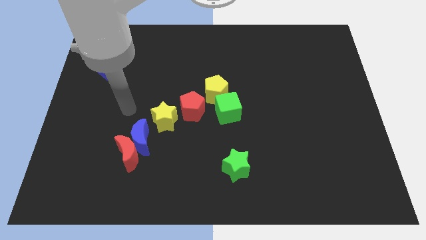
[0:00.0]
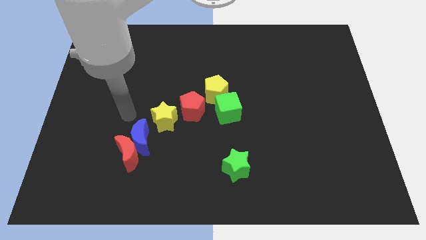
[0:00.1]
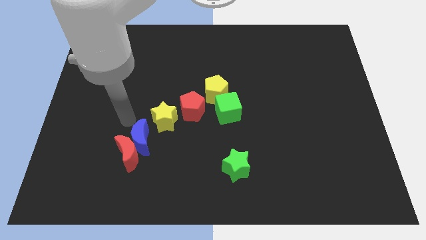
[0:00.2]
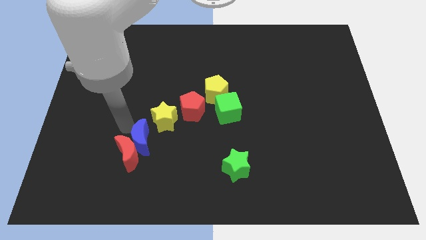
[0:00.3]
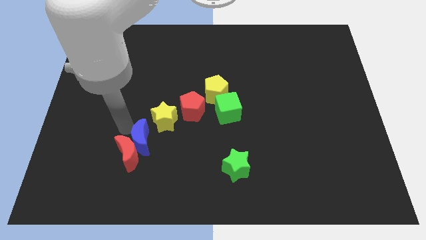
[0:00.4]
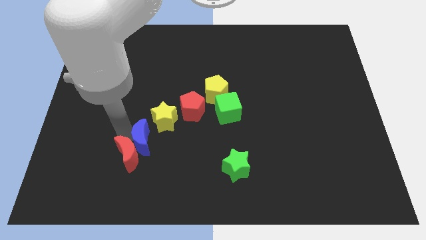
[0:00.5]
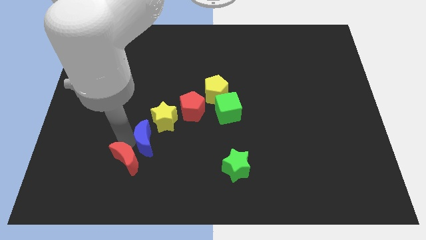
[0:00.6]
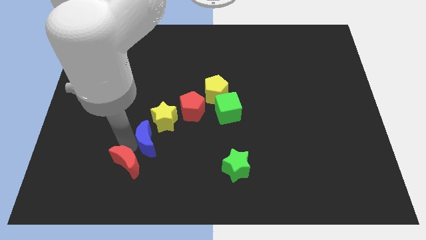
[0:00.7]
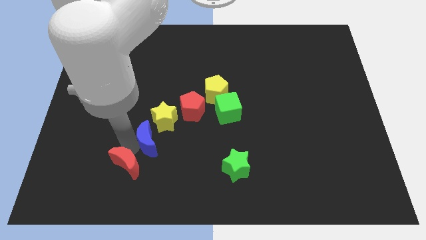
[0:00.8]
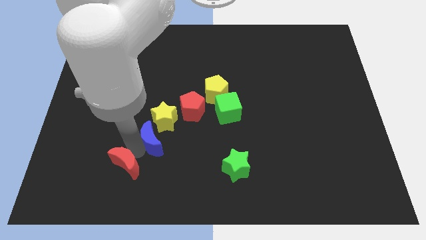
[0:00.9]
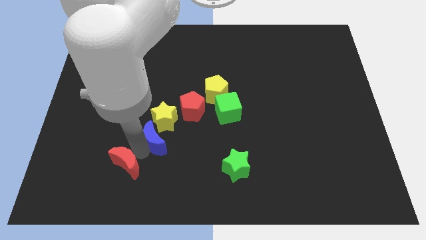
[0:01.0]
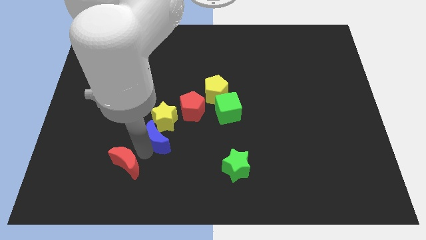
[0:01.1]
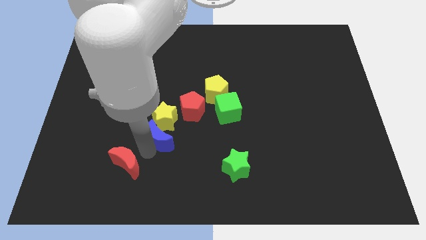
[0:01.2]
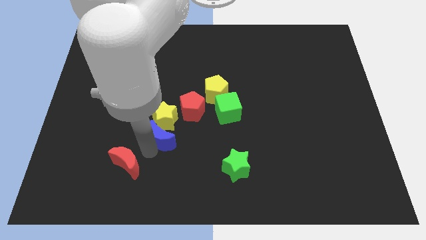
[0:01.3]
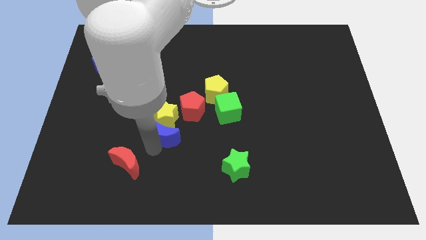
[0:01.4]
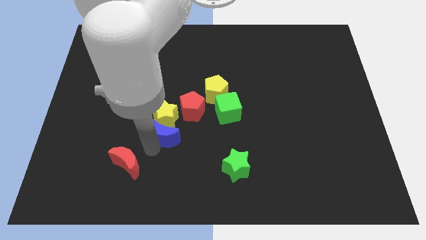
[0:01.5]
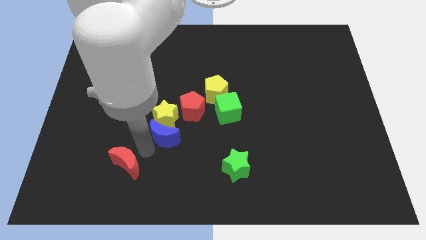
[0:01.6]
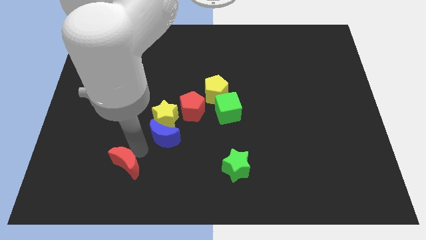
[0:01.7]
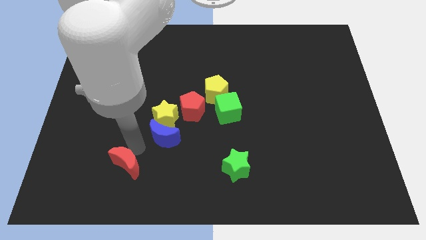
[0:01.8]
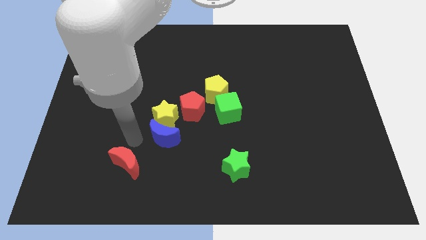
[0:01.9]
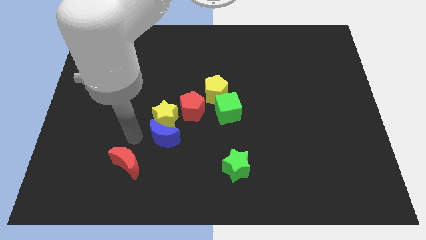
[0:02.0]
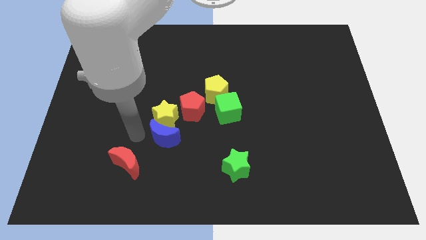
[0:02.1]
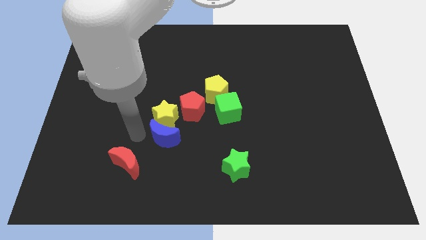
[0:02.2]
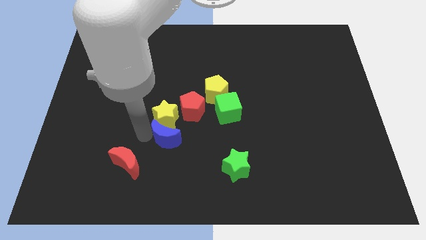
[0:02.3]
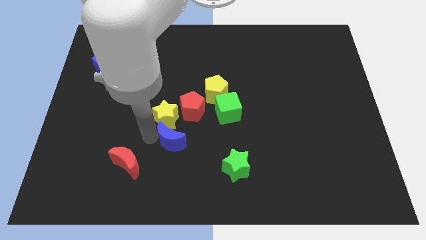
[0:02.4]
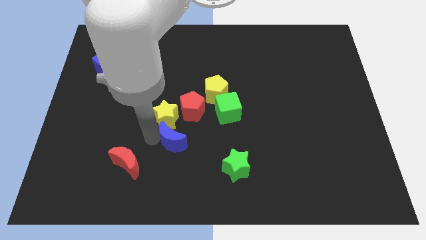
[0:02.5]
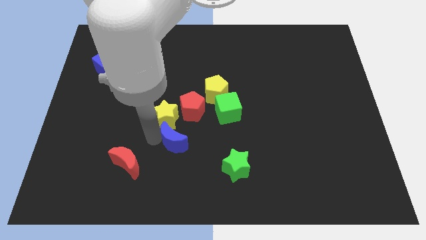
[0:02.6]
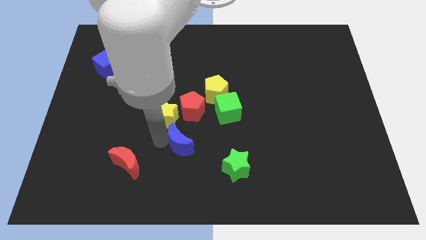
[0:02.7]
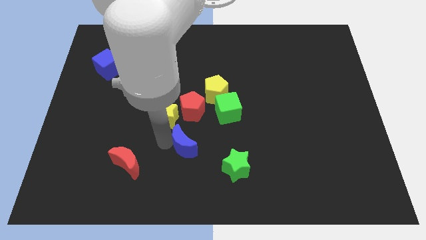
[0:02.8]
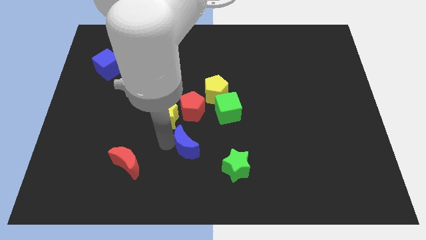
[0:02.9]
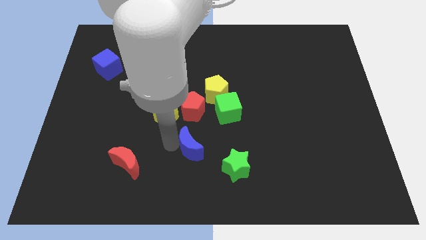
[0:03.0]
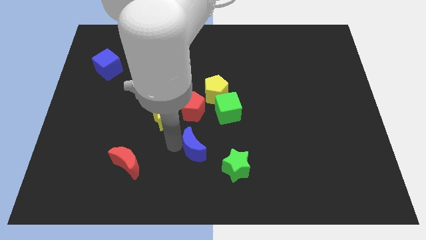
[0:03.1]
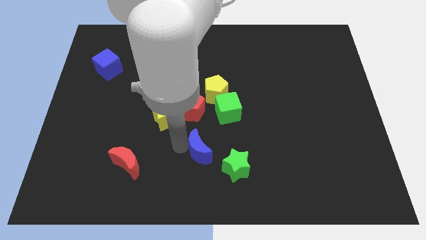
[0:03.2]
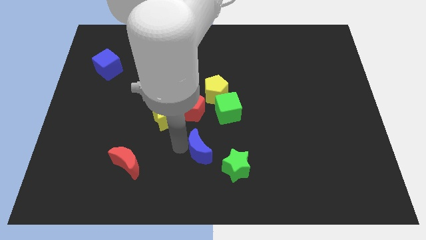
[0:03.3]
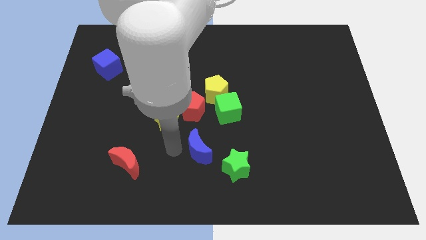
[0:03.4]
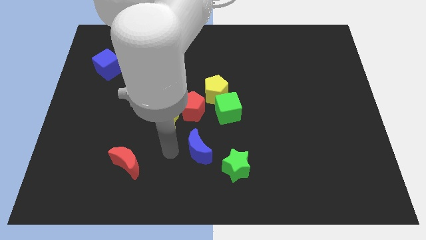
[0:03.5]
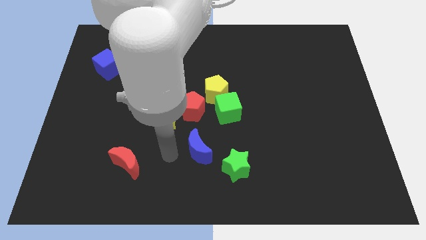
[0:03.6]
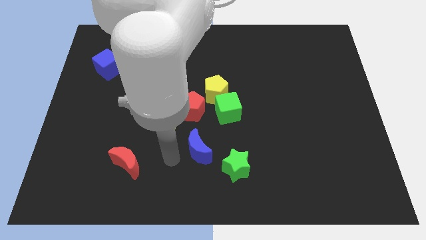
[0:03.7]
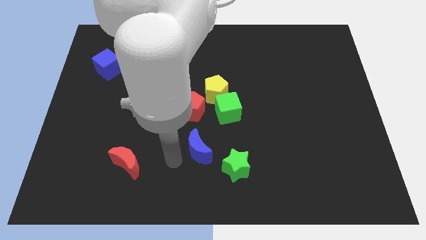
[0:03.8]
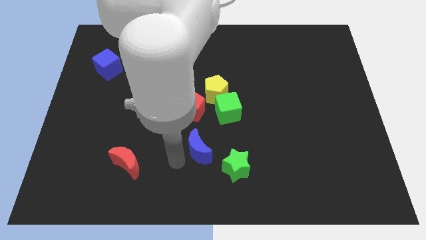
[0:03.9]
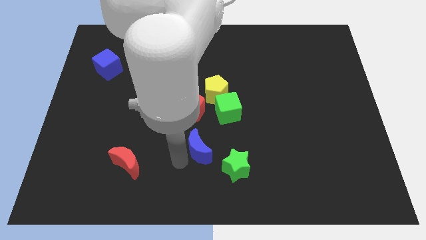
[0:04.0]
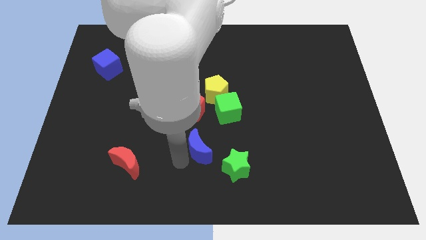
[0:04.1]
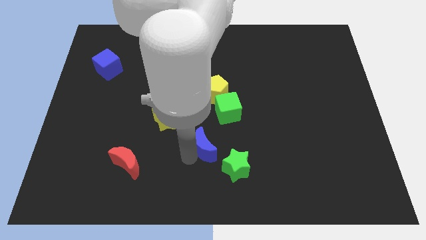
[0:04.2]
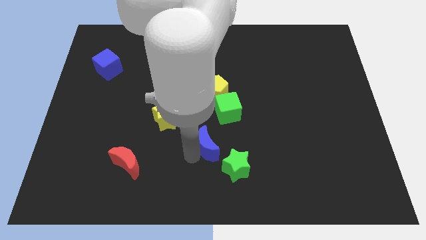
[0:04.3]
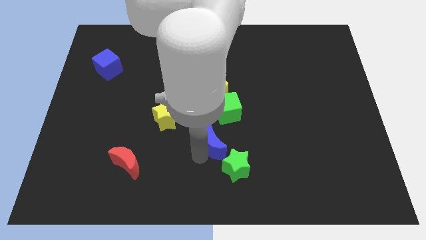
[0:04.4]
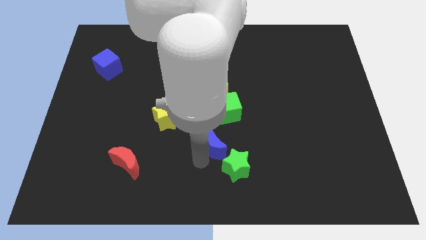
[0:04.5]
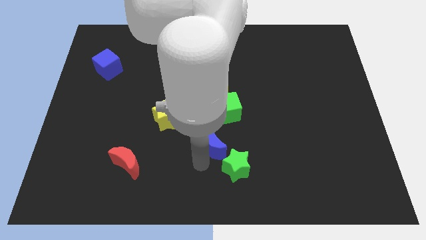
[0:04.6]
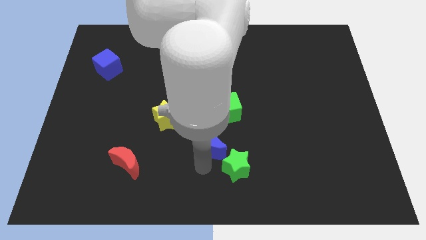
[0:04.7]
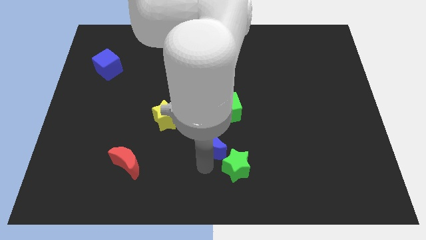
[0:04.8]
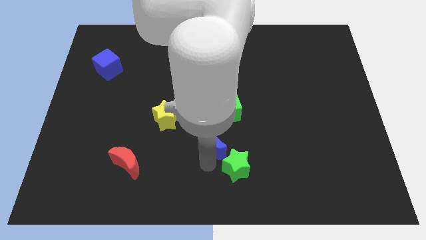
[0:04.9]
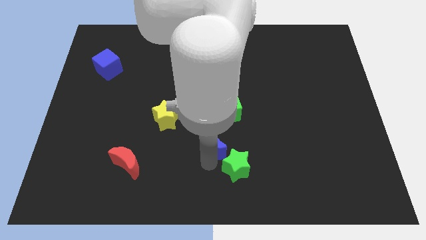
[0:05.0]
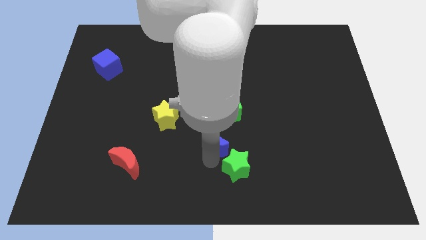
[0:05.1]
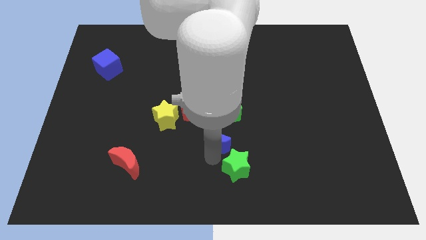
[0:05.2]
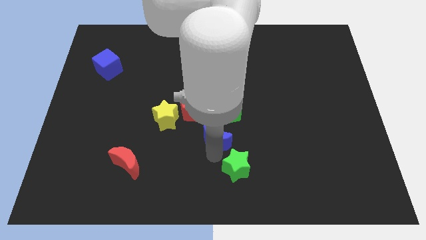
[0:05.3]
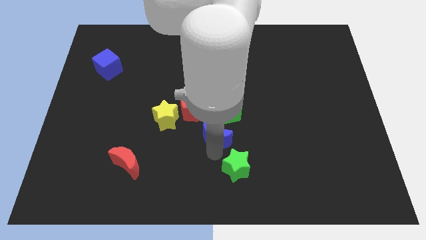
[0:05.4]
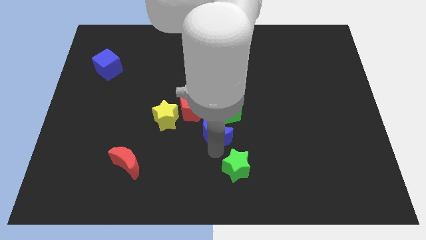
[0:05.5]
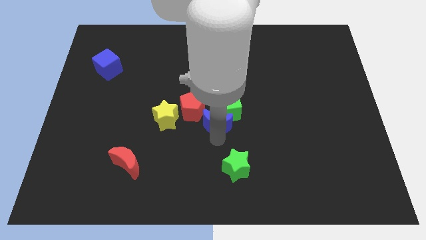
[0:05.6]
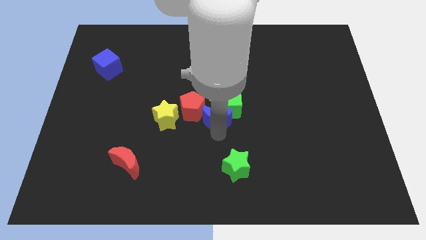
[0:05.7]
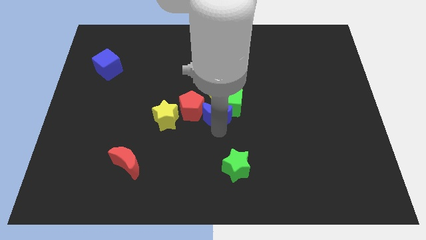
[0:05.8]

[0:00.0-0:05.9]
put the blue moon towards the green cube

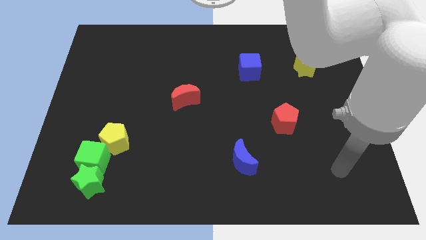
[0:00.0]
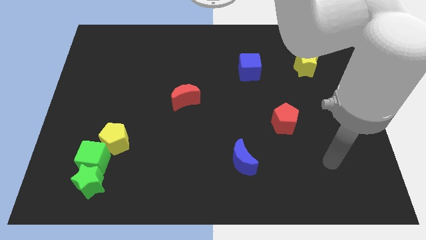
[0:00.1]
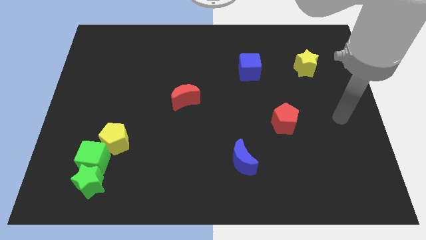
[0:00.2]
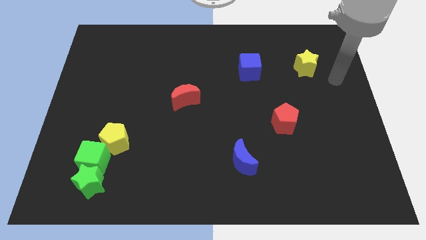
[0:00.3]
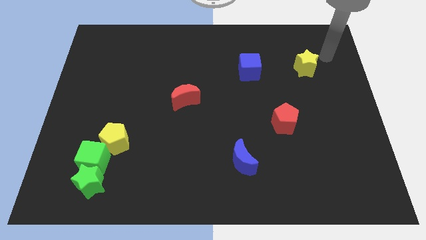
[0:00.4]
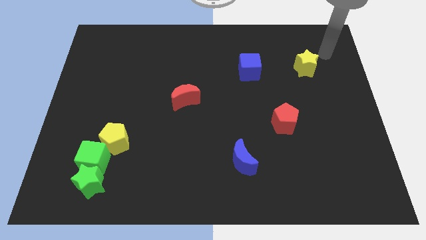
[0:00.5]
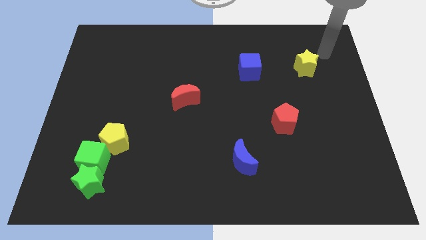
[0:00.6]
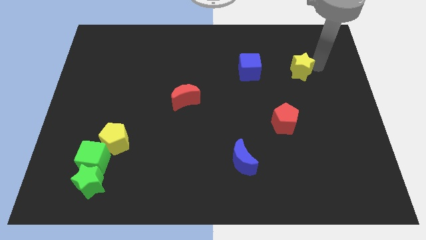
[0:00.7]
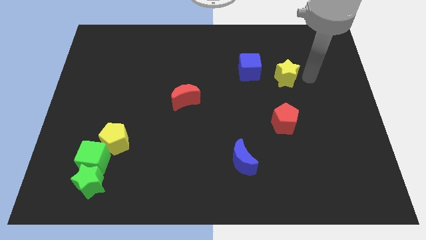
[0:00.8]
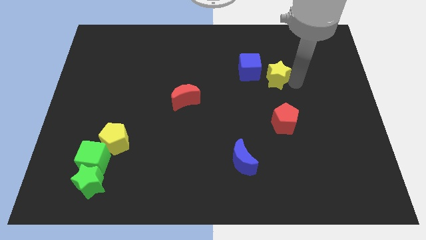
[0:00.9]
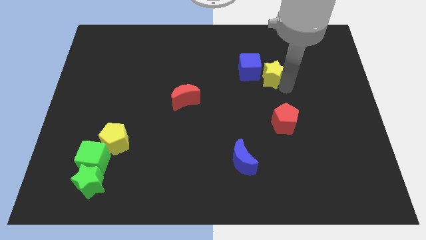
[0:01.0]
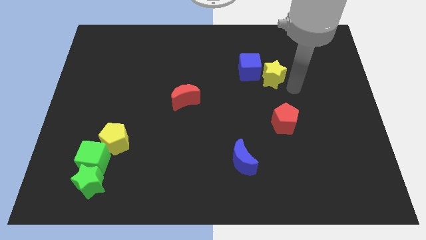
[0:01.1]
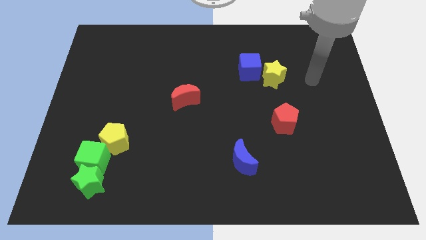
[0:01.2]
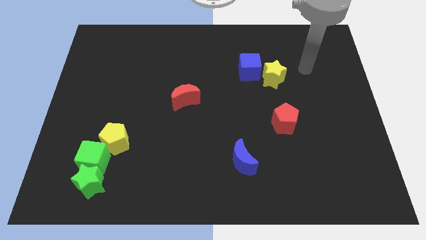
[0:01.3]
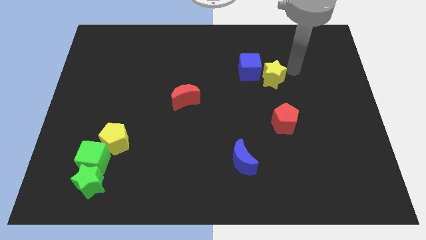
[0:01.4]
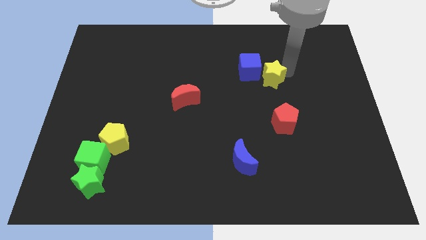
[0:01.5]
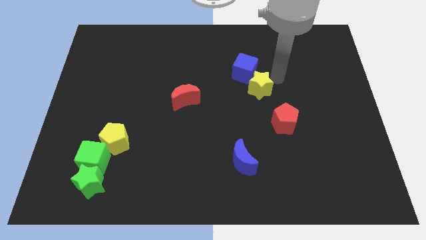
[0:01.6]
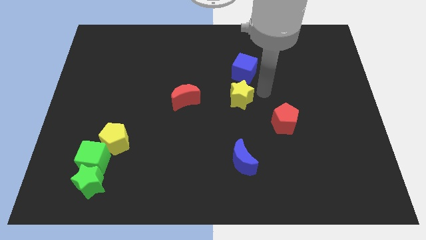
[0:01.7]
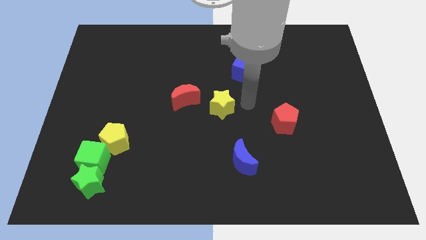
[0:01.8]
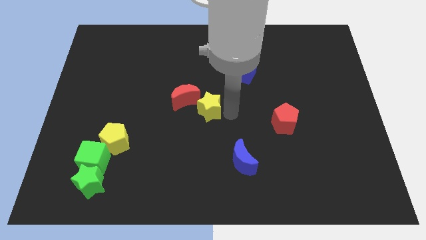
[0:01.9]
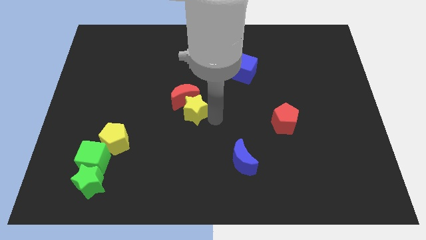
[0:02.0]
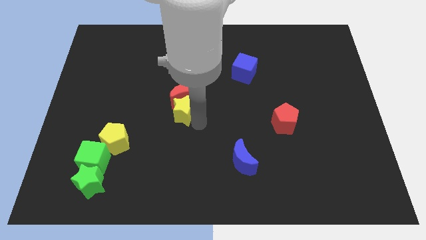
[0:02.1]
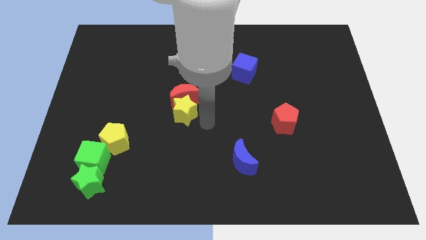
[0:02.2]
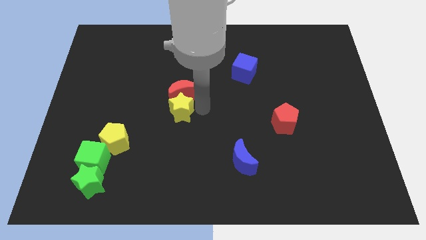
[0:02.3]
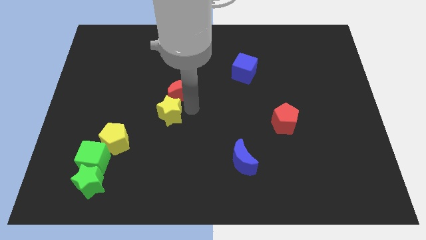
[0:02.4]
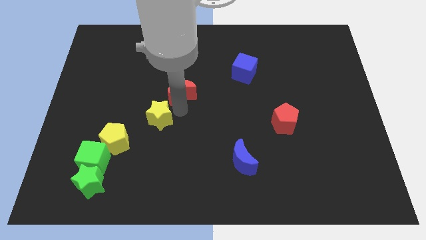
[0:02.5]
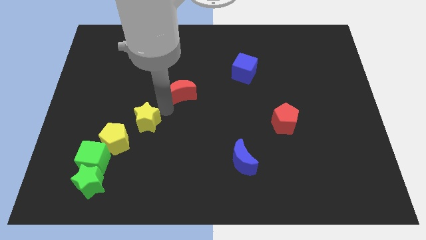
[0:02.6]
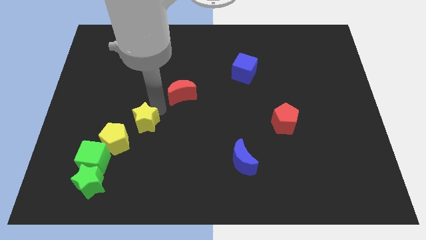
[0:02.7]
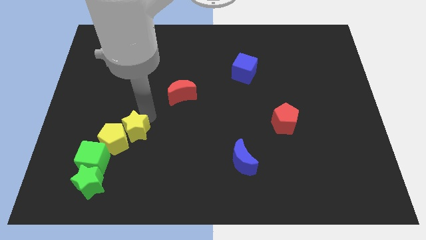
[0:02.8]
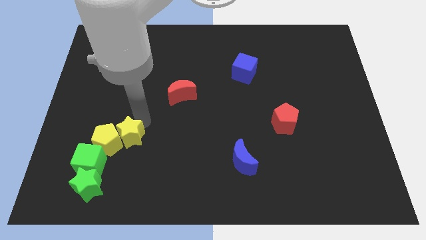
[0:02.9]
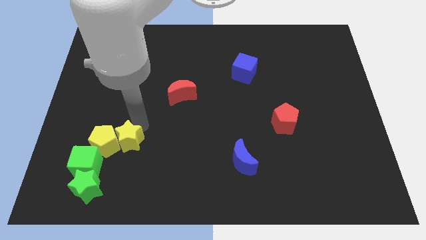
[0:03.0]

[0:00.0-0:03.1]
put the yellow star next to the yellow pentagon
